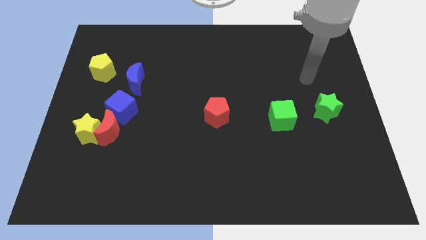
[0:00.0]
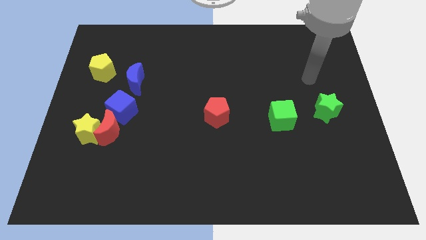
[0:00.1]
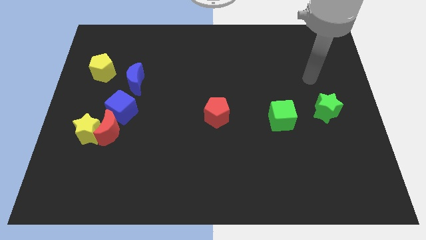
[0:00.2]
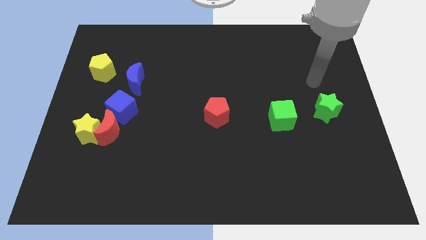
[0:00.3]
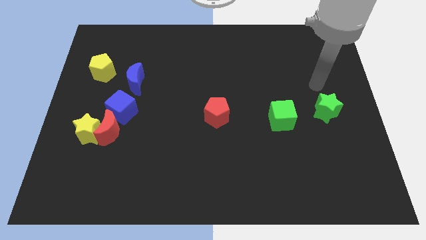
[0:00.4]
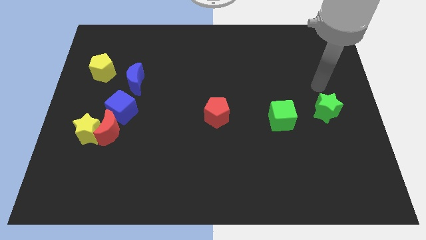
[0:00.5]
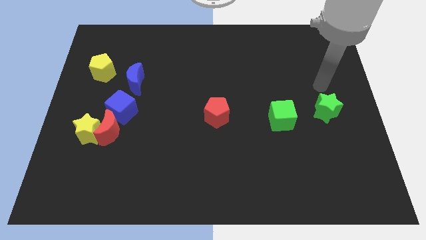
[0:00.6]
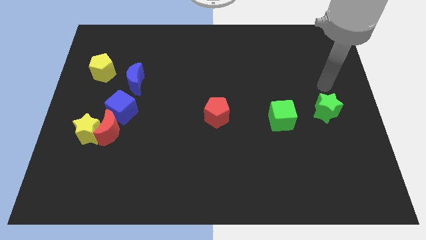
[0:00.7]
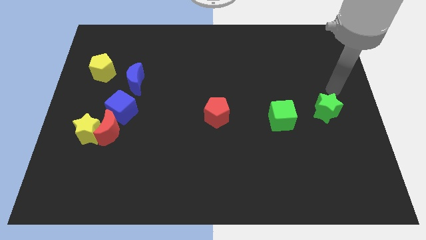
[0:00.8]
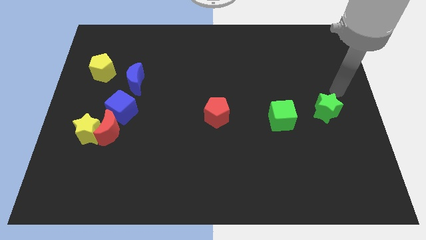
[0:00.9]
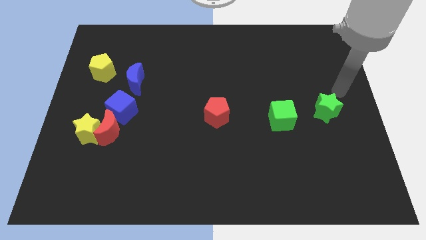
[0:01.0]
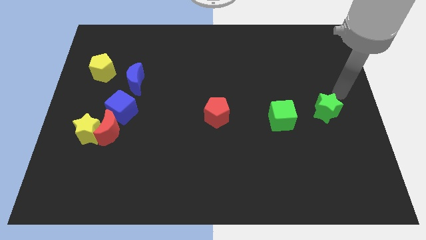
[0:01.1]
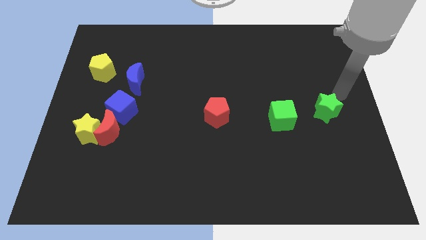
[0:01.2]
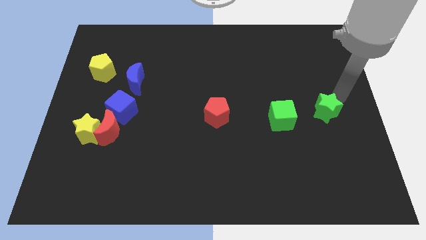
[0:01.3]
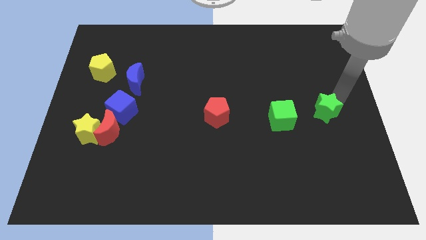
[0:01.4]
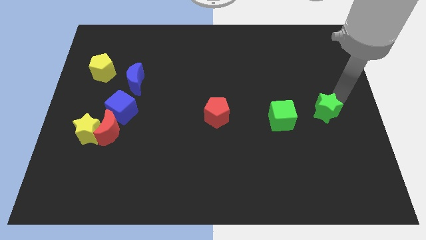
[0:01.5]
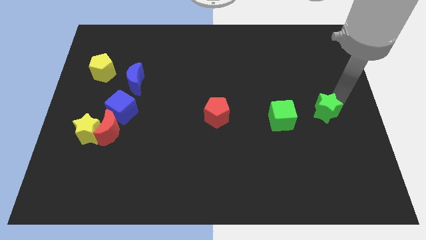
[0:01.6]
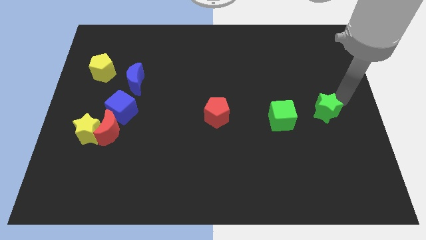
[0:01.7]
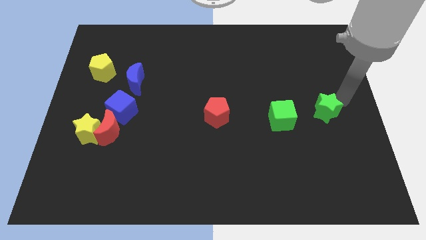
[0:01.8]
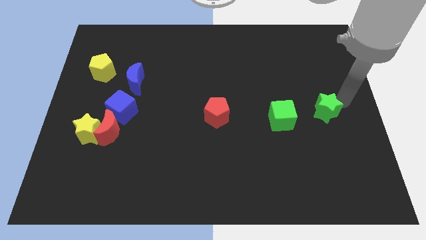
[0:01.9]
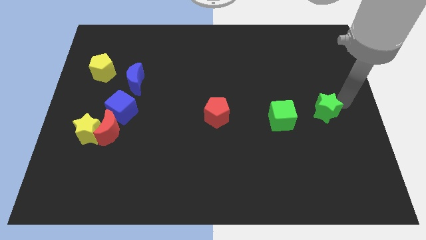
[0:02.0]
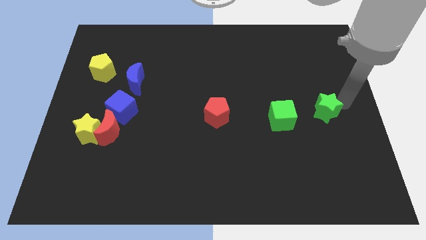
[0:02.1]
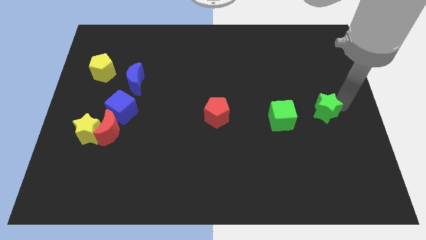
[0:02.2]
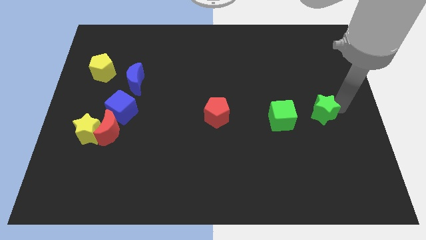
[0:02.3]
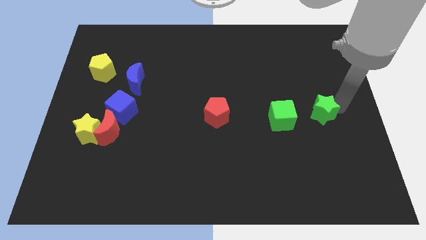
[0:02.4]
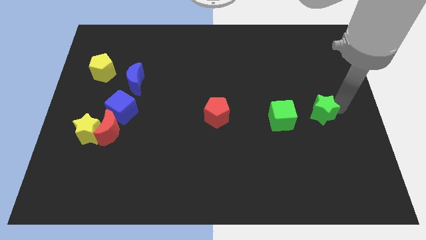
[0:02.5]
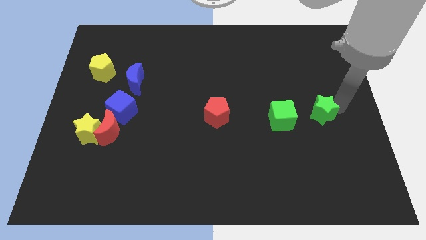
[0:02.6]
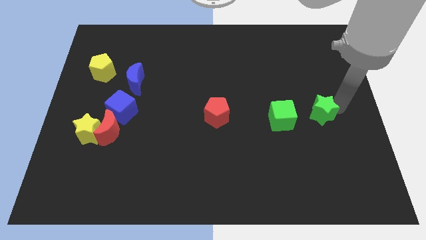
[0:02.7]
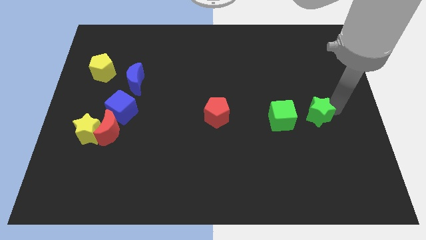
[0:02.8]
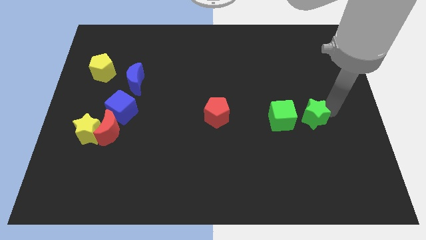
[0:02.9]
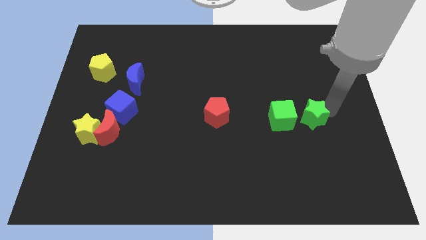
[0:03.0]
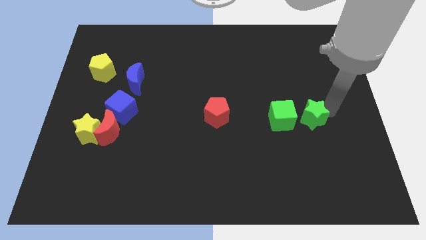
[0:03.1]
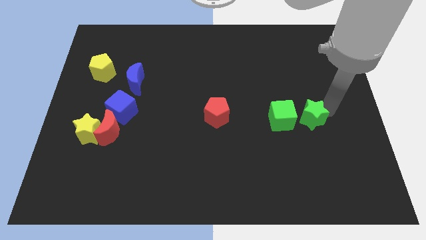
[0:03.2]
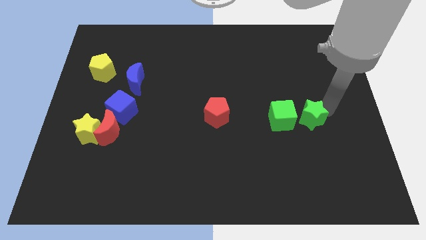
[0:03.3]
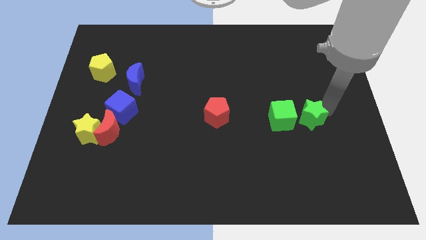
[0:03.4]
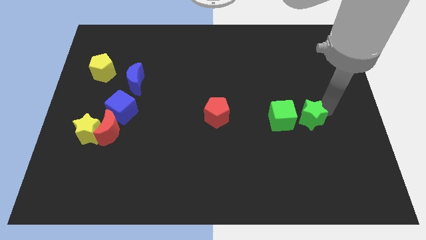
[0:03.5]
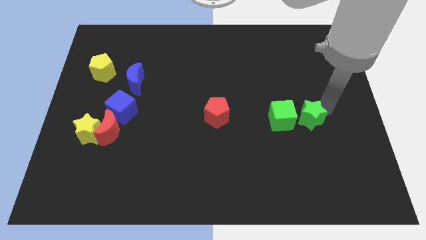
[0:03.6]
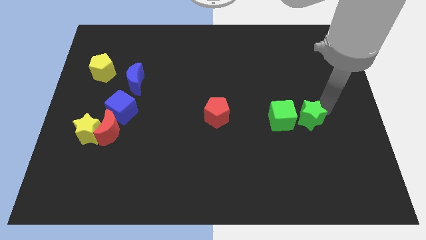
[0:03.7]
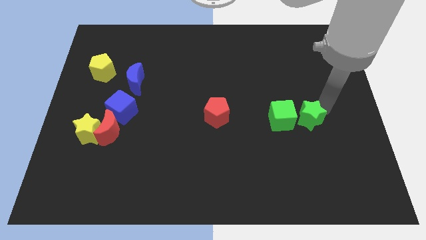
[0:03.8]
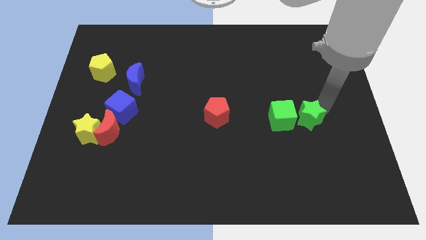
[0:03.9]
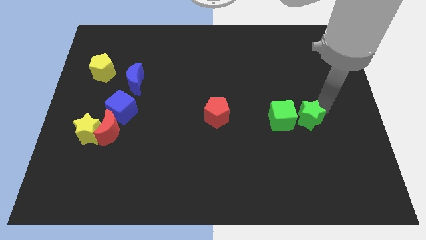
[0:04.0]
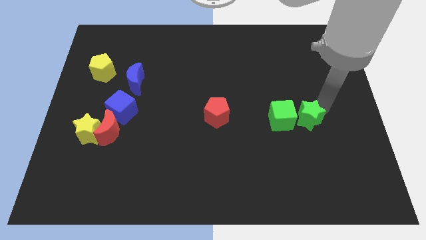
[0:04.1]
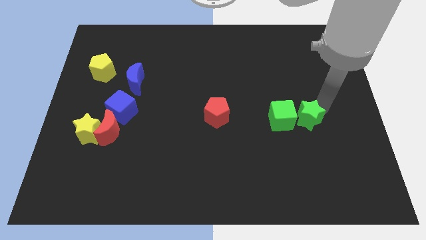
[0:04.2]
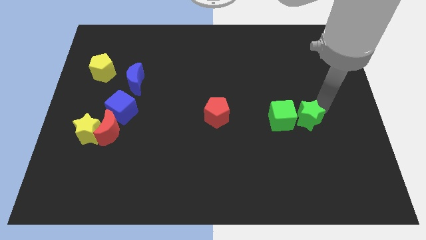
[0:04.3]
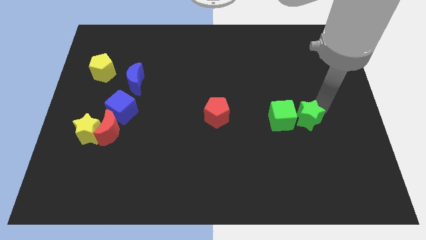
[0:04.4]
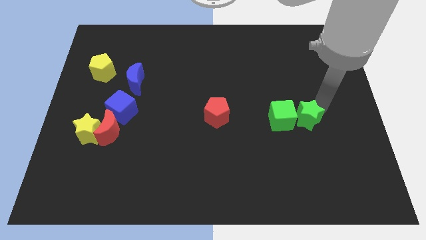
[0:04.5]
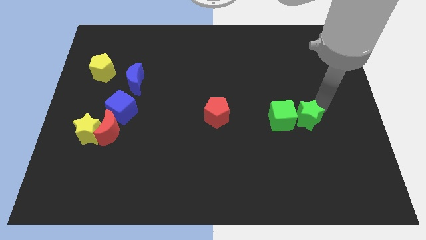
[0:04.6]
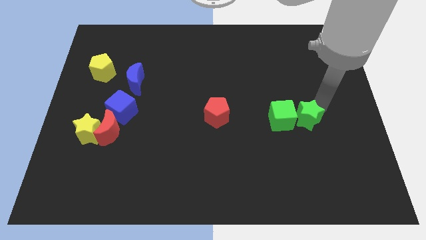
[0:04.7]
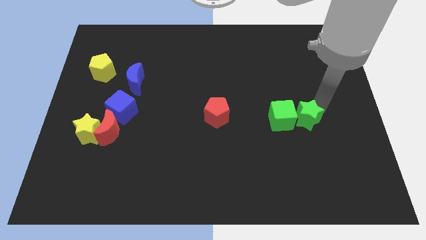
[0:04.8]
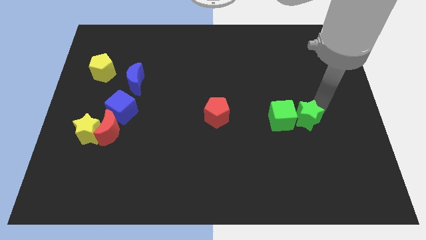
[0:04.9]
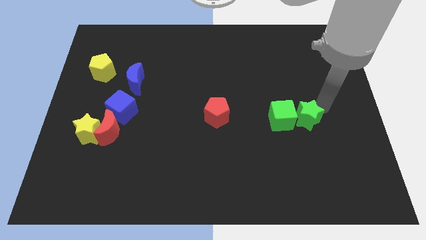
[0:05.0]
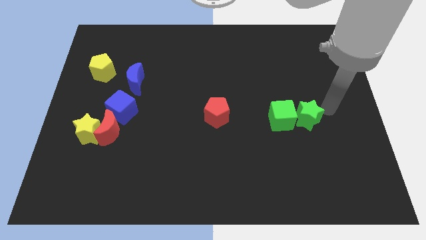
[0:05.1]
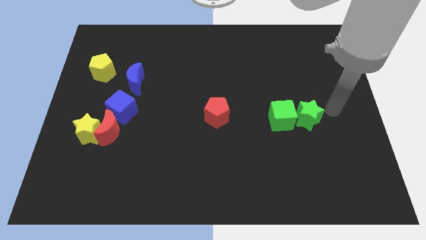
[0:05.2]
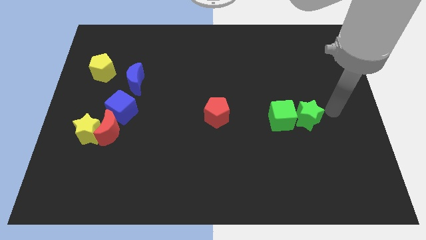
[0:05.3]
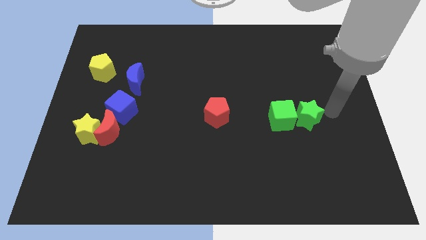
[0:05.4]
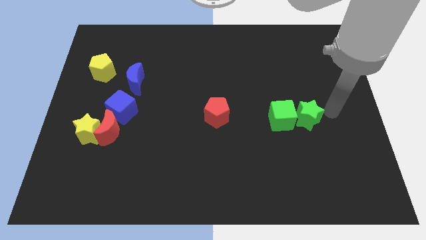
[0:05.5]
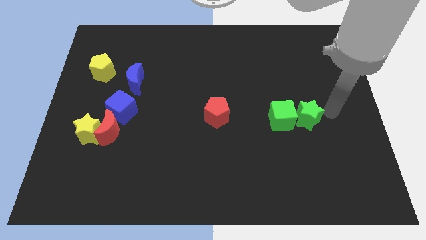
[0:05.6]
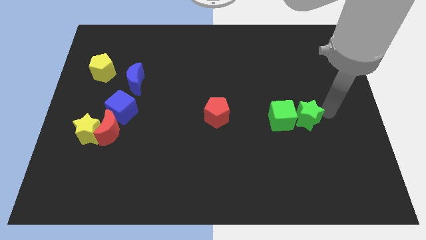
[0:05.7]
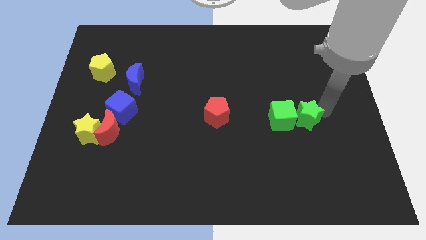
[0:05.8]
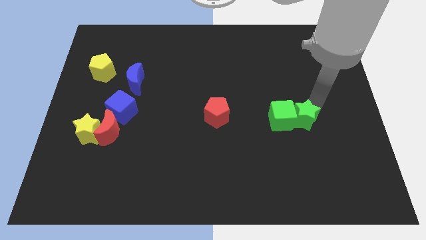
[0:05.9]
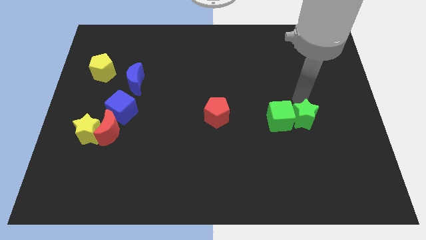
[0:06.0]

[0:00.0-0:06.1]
push the green star right to the green cube

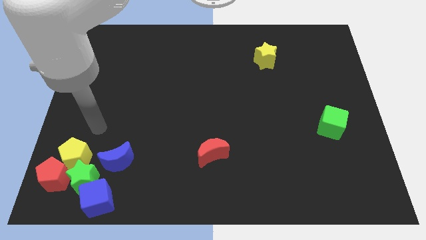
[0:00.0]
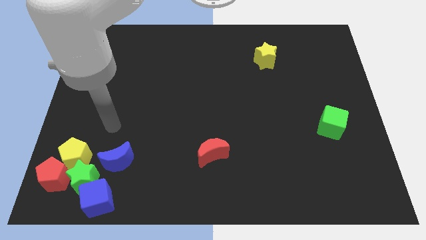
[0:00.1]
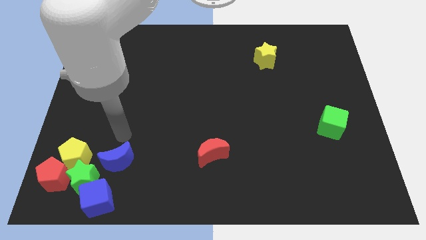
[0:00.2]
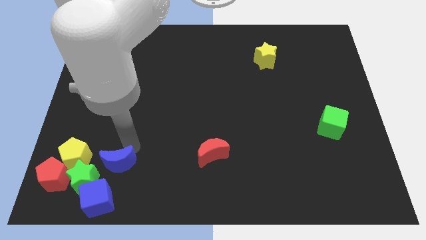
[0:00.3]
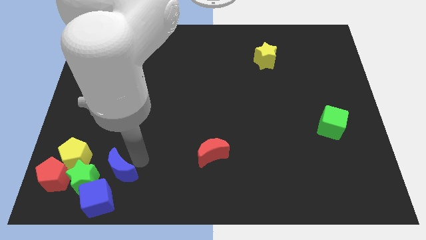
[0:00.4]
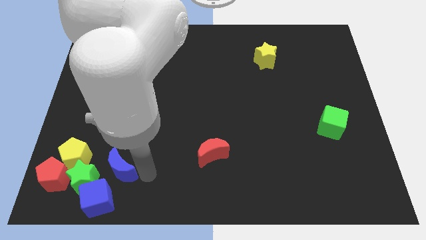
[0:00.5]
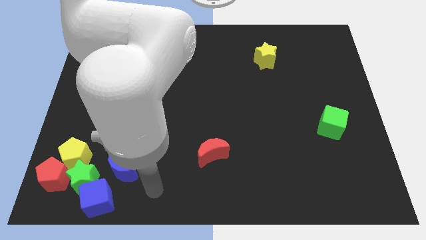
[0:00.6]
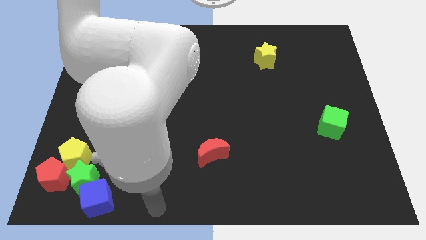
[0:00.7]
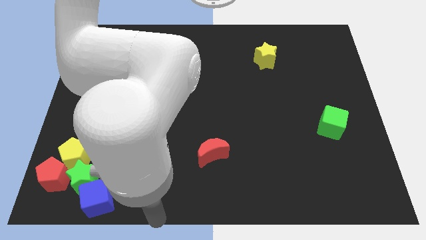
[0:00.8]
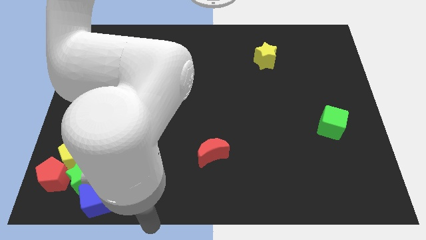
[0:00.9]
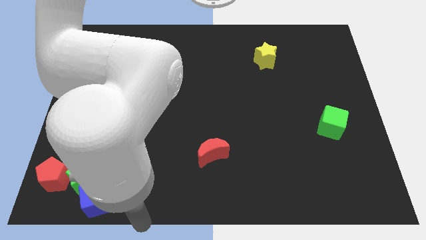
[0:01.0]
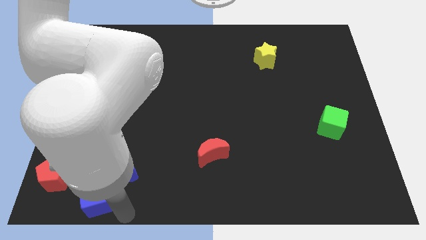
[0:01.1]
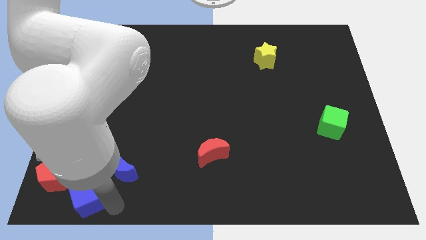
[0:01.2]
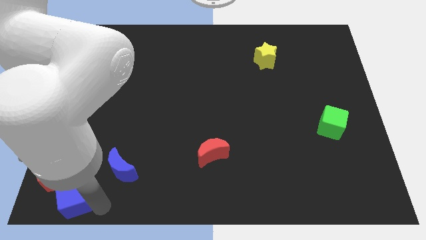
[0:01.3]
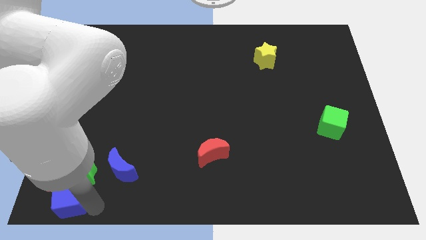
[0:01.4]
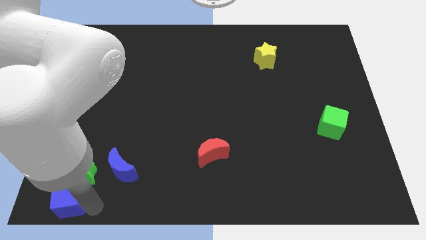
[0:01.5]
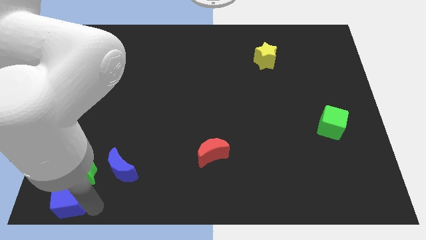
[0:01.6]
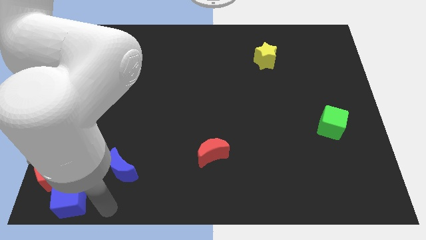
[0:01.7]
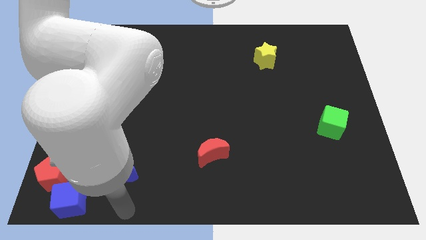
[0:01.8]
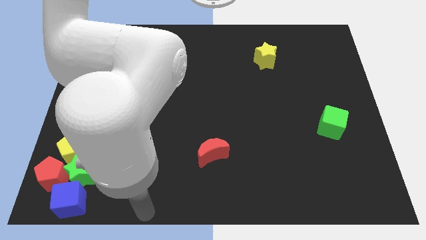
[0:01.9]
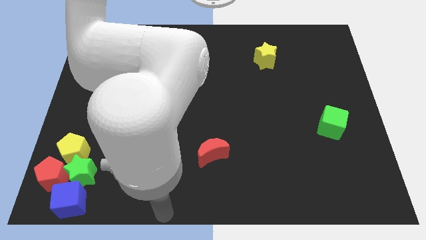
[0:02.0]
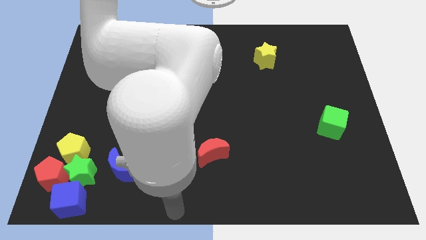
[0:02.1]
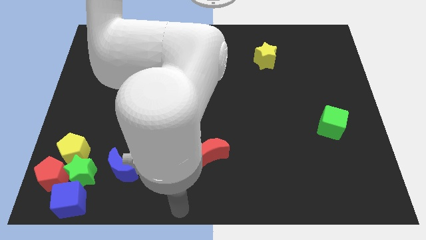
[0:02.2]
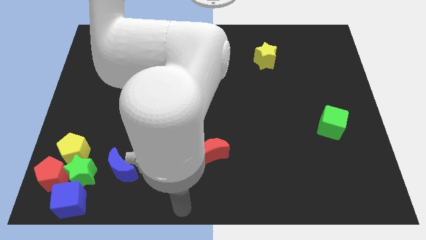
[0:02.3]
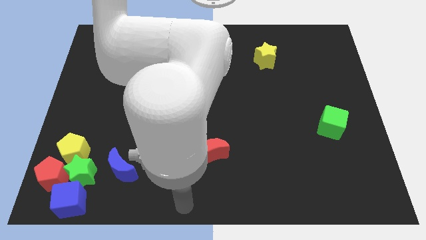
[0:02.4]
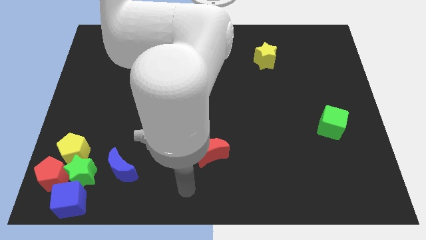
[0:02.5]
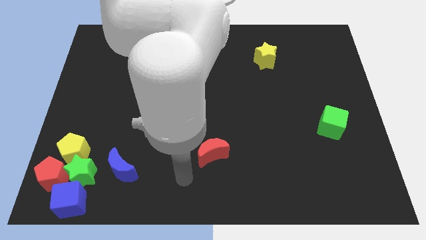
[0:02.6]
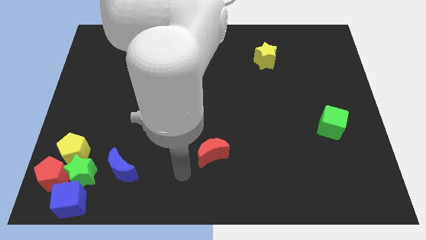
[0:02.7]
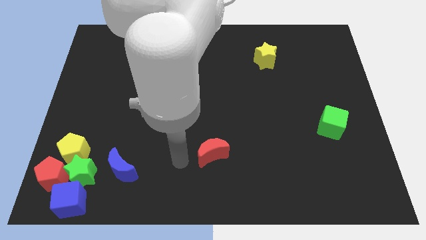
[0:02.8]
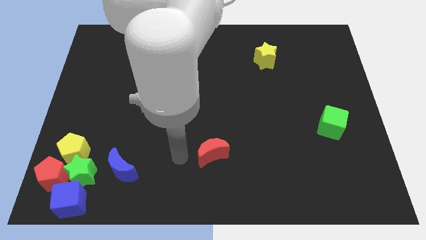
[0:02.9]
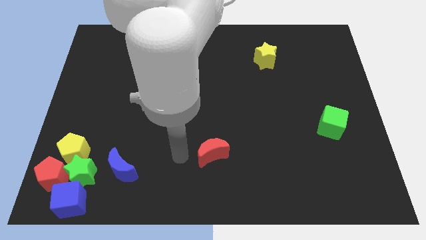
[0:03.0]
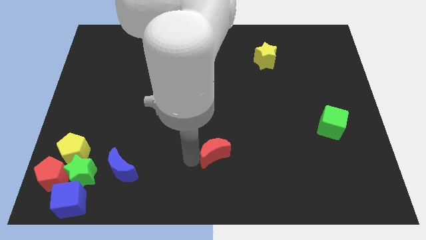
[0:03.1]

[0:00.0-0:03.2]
place the arm left to the red moon
